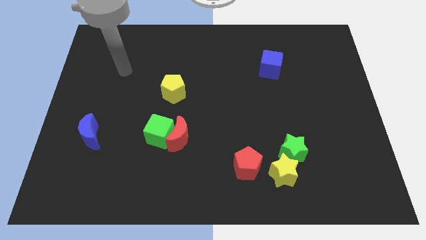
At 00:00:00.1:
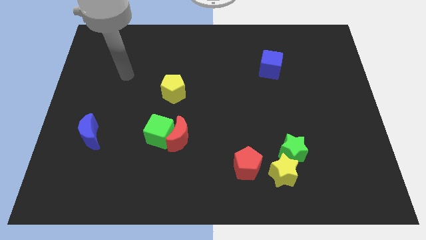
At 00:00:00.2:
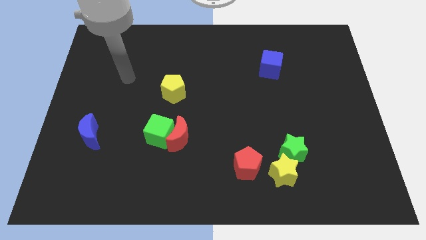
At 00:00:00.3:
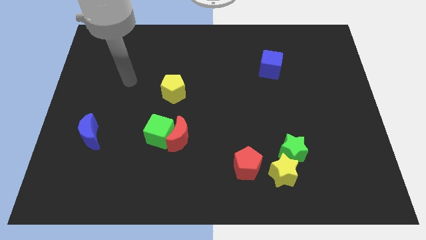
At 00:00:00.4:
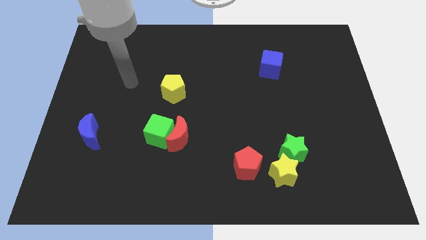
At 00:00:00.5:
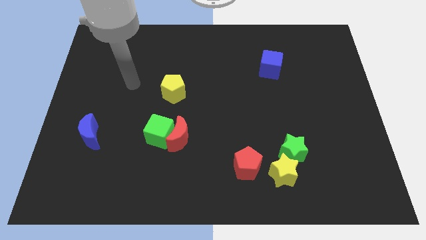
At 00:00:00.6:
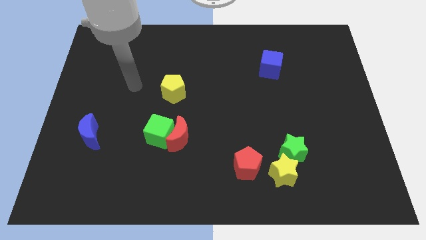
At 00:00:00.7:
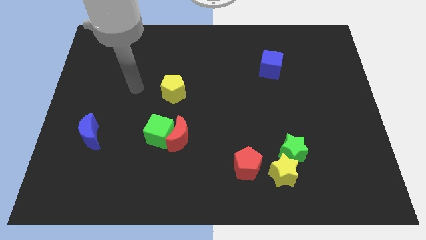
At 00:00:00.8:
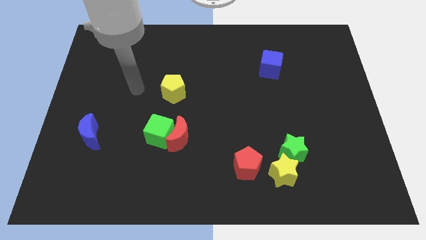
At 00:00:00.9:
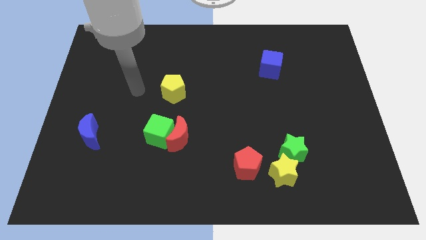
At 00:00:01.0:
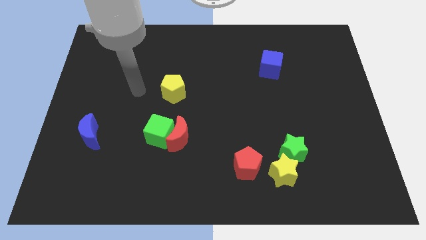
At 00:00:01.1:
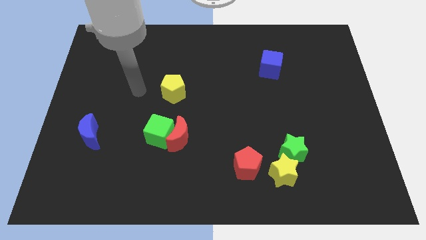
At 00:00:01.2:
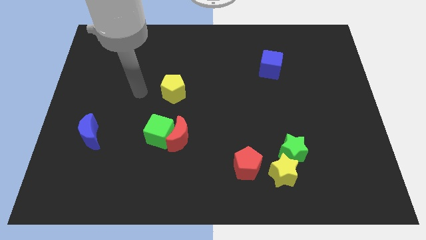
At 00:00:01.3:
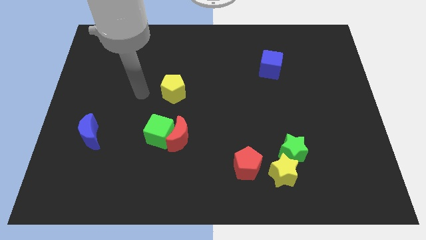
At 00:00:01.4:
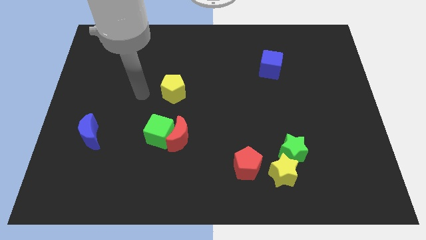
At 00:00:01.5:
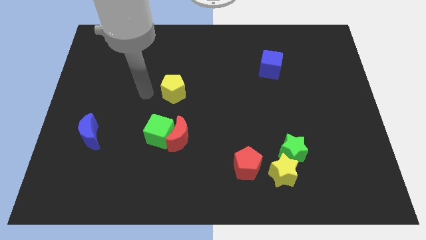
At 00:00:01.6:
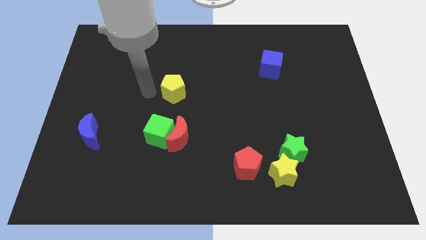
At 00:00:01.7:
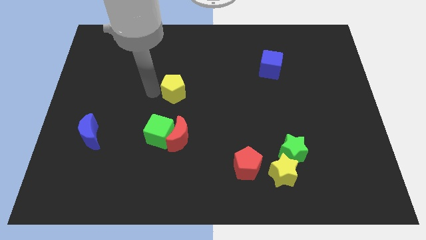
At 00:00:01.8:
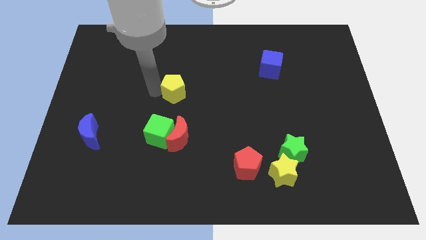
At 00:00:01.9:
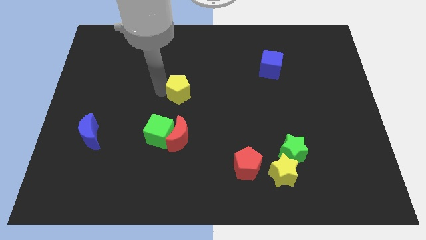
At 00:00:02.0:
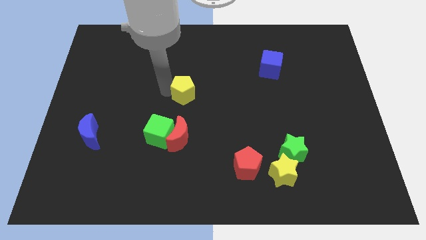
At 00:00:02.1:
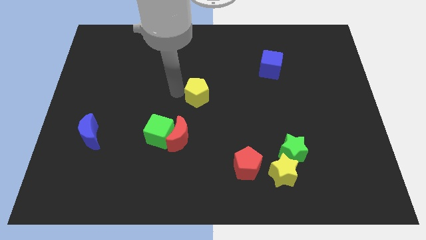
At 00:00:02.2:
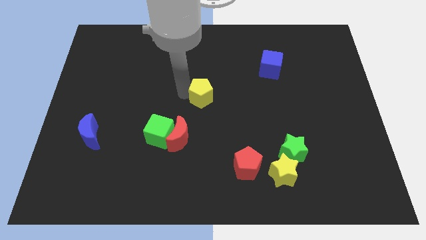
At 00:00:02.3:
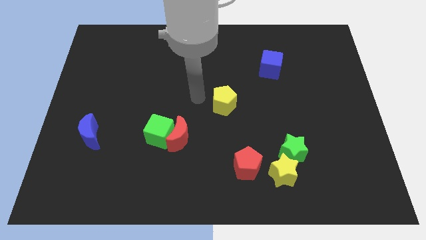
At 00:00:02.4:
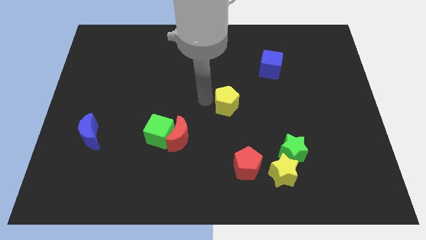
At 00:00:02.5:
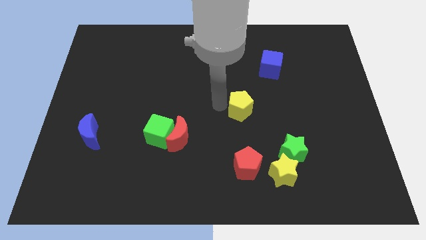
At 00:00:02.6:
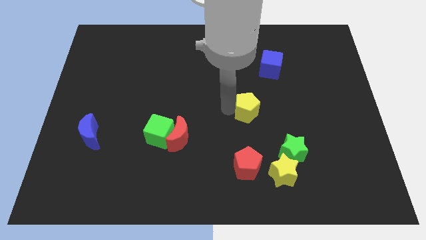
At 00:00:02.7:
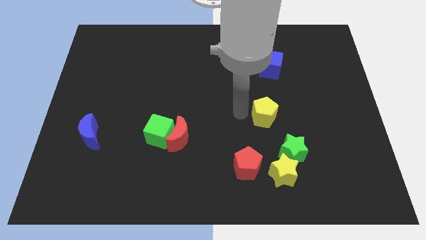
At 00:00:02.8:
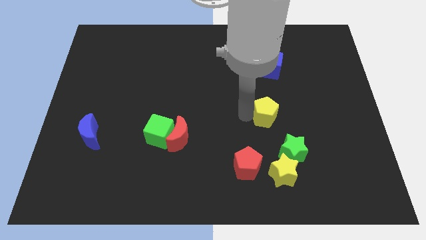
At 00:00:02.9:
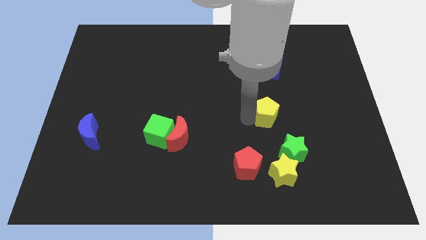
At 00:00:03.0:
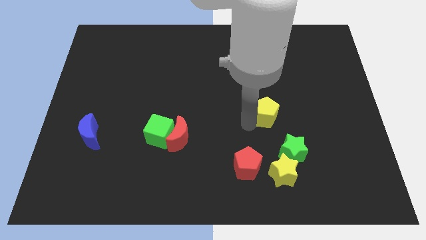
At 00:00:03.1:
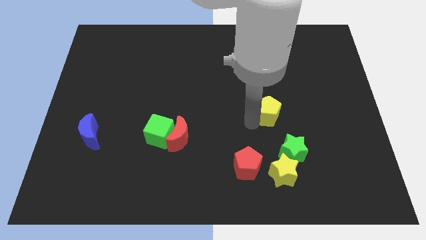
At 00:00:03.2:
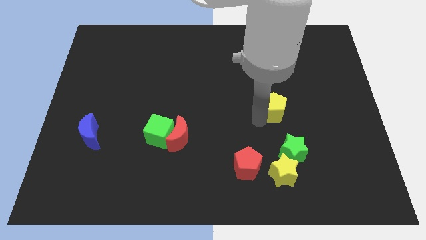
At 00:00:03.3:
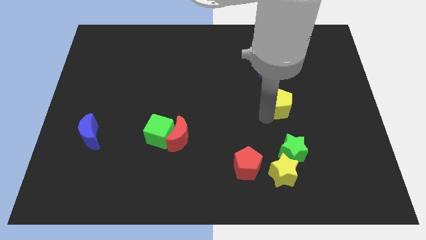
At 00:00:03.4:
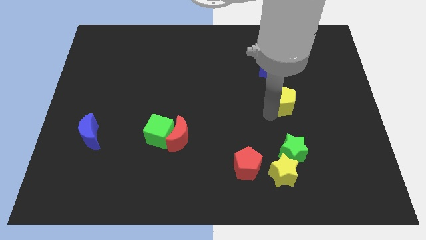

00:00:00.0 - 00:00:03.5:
move yellow pentagon to the right side

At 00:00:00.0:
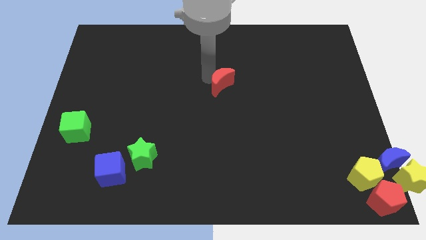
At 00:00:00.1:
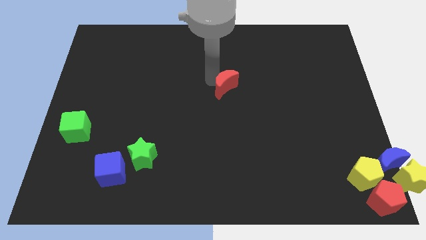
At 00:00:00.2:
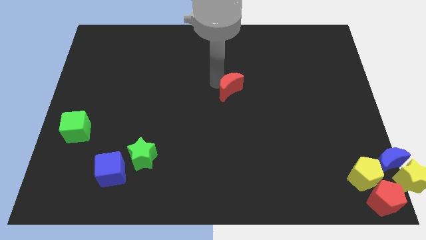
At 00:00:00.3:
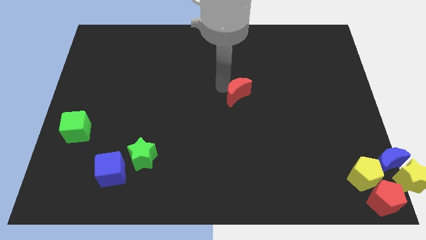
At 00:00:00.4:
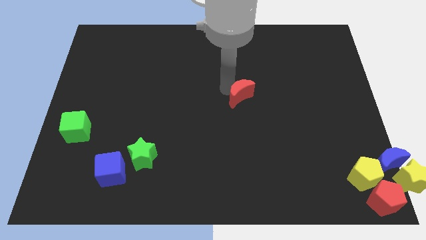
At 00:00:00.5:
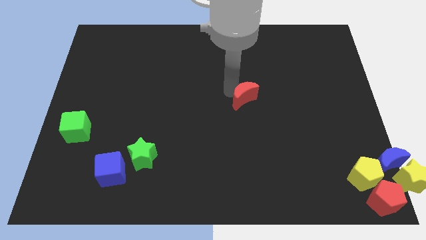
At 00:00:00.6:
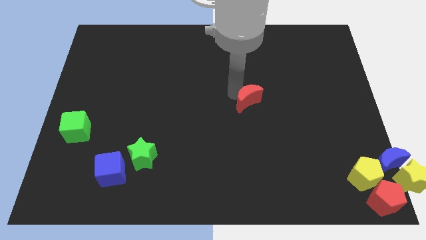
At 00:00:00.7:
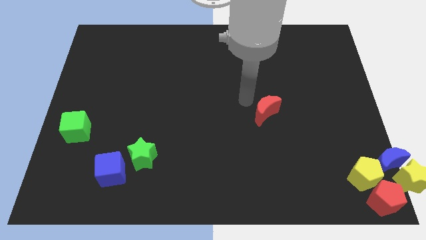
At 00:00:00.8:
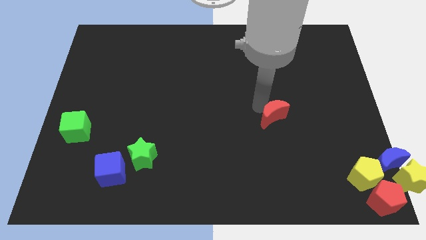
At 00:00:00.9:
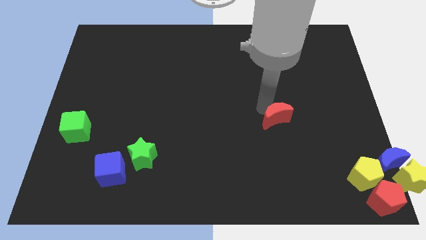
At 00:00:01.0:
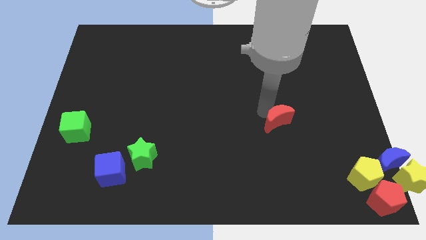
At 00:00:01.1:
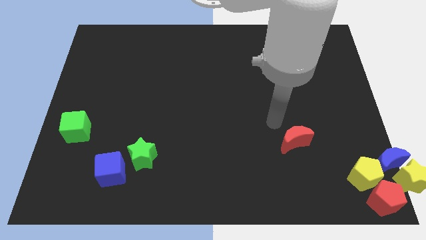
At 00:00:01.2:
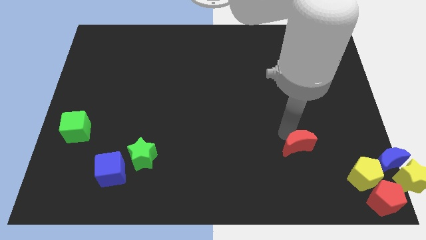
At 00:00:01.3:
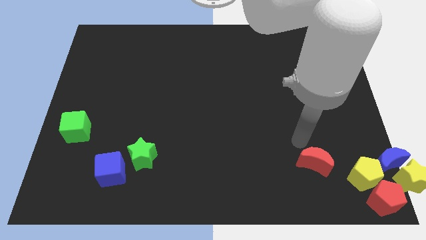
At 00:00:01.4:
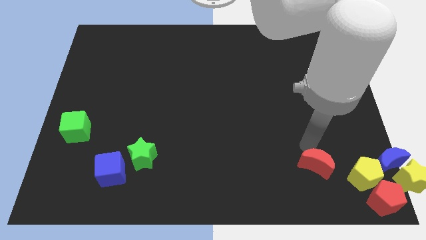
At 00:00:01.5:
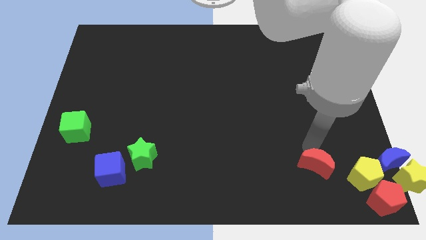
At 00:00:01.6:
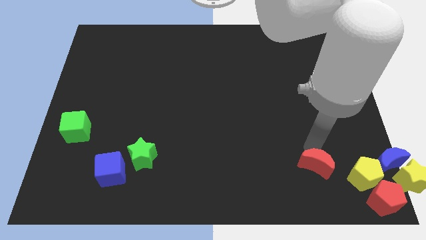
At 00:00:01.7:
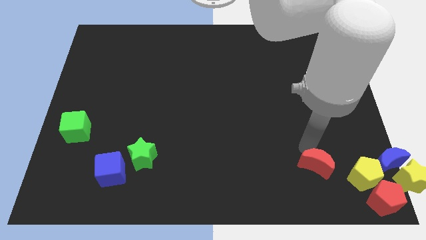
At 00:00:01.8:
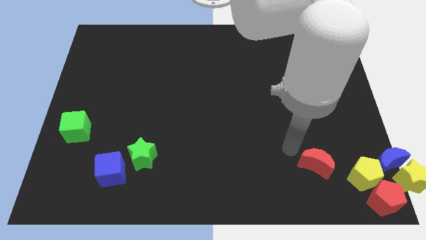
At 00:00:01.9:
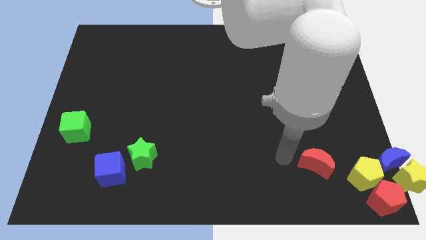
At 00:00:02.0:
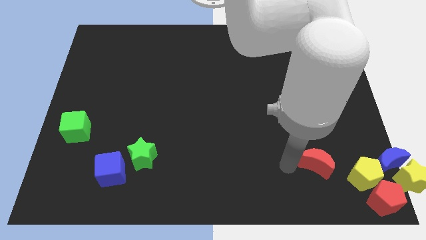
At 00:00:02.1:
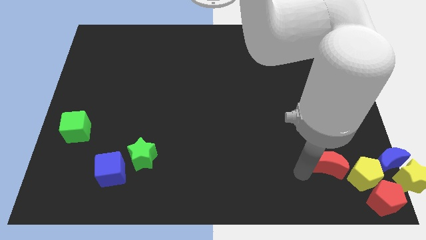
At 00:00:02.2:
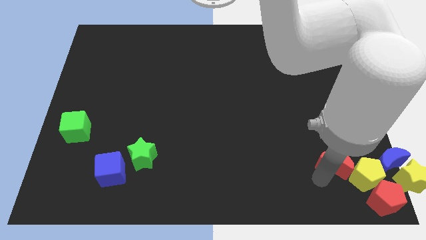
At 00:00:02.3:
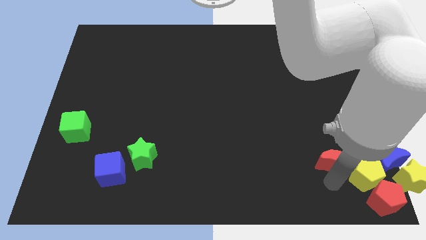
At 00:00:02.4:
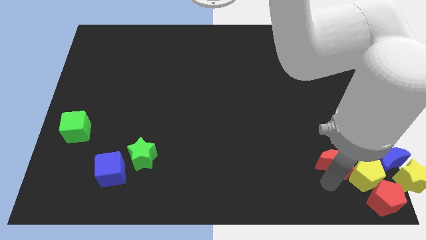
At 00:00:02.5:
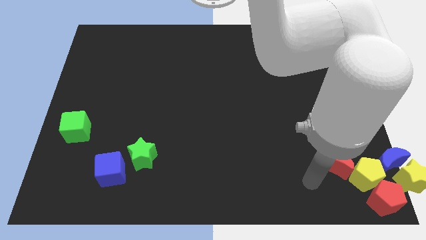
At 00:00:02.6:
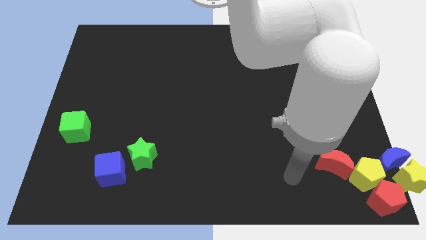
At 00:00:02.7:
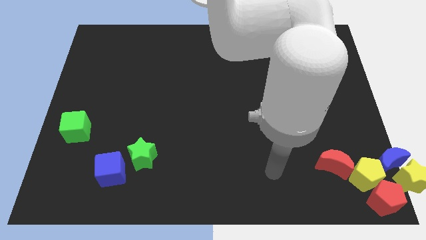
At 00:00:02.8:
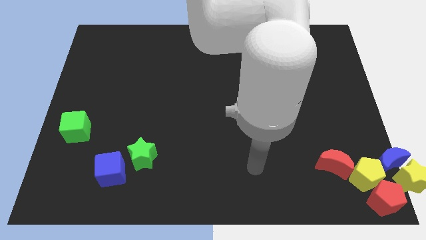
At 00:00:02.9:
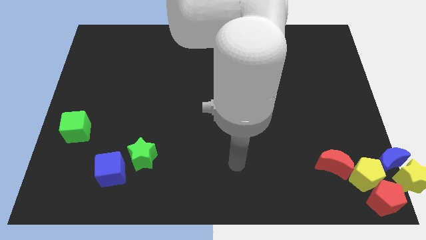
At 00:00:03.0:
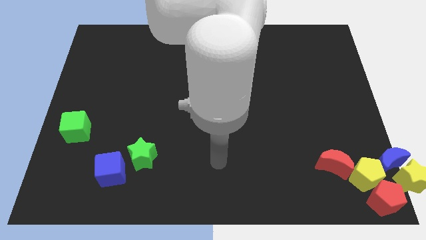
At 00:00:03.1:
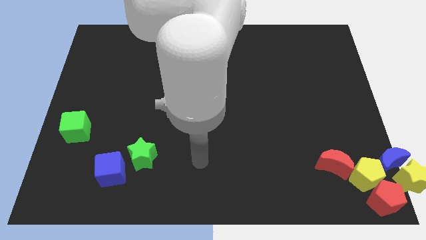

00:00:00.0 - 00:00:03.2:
push the red moon towards the bottom right

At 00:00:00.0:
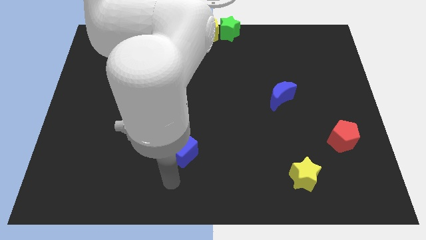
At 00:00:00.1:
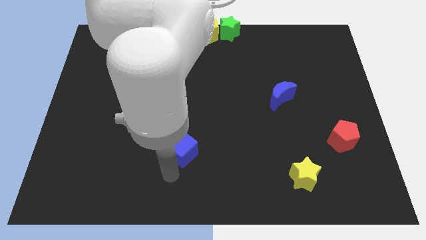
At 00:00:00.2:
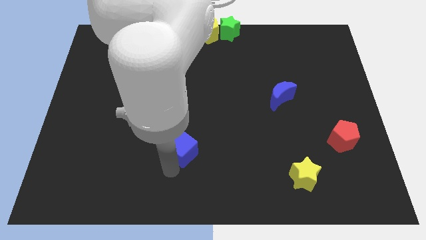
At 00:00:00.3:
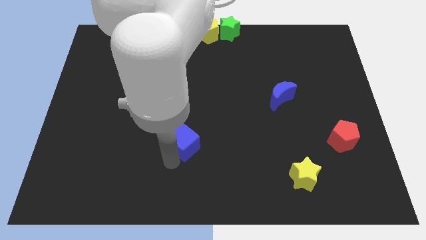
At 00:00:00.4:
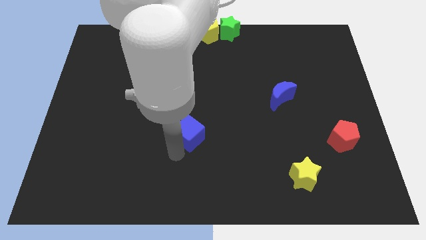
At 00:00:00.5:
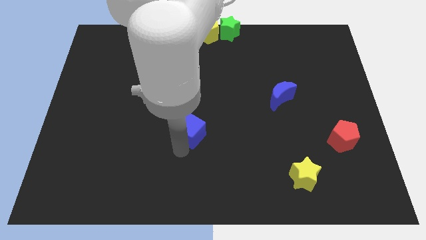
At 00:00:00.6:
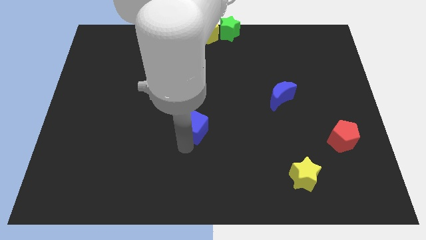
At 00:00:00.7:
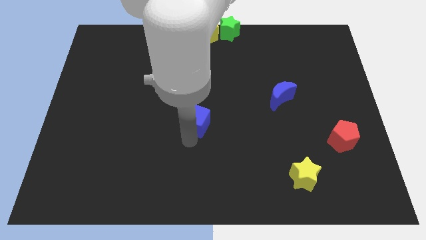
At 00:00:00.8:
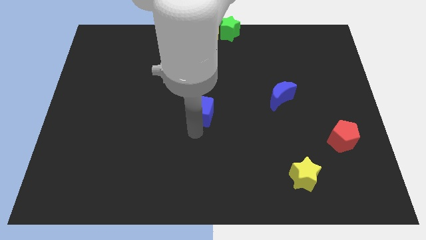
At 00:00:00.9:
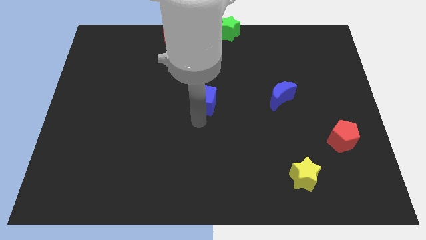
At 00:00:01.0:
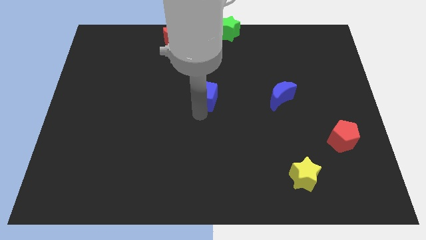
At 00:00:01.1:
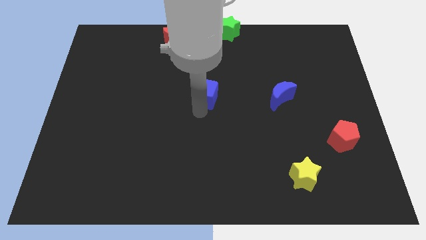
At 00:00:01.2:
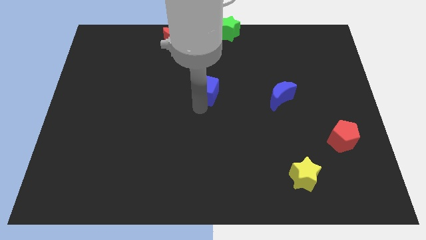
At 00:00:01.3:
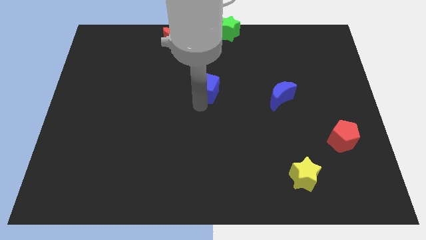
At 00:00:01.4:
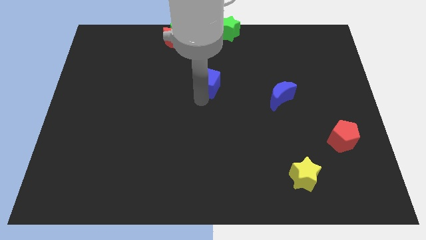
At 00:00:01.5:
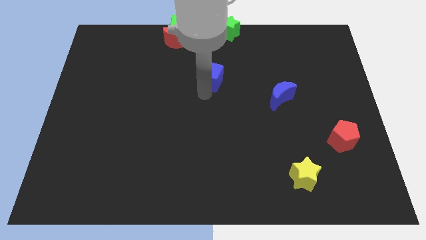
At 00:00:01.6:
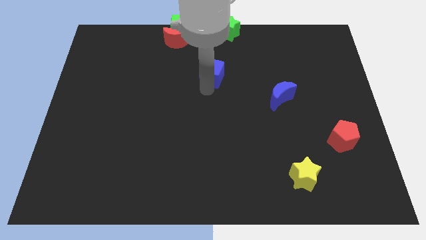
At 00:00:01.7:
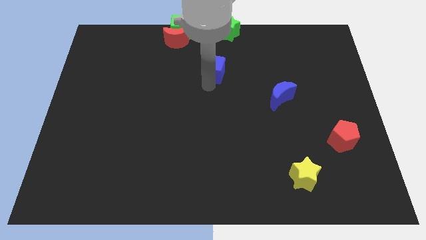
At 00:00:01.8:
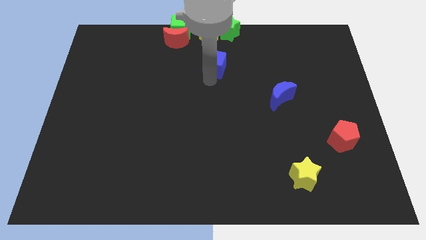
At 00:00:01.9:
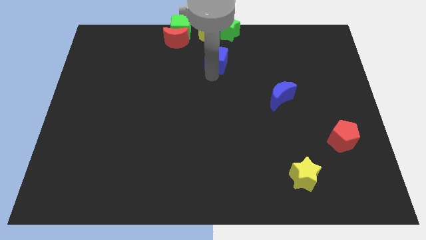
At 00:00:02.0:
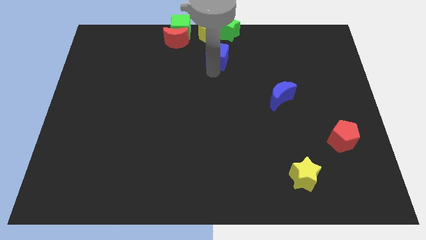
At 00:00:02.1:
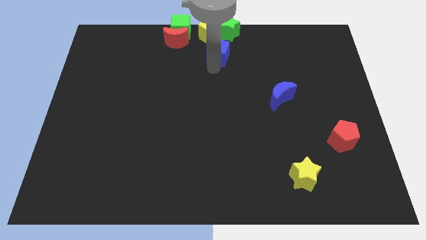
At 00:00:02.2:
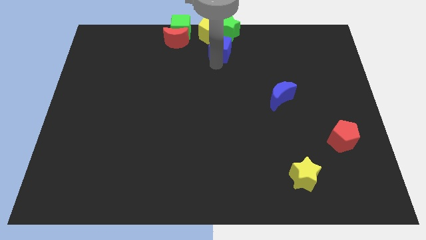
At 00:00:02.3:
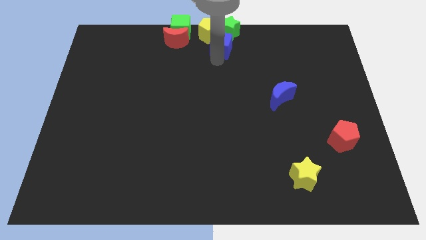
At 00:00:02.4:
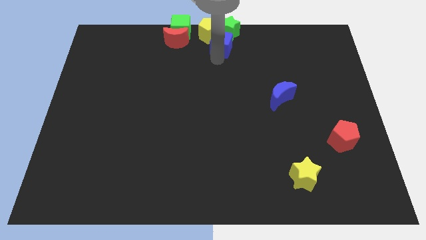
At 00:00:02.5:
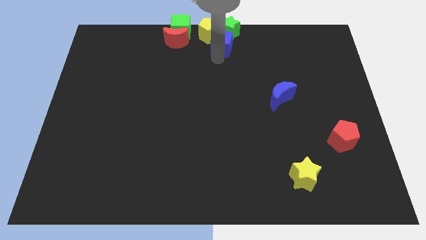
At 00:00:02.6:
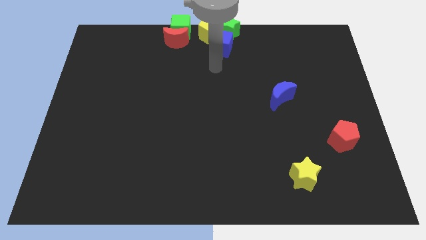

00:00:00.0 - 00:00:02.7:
place blue cube below green star
